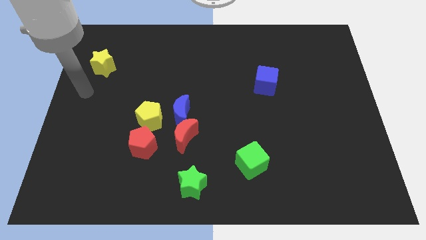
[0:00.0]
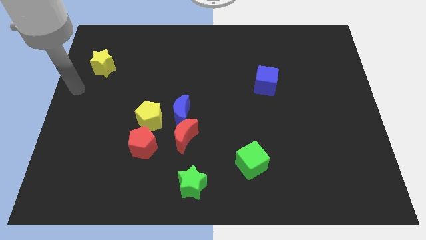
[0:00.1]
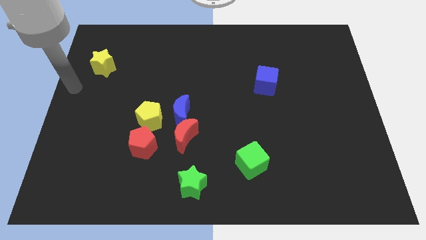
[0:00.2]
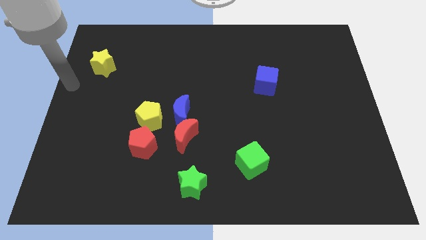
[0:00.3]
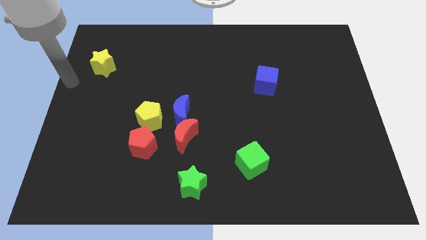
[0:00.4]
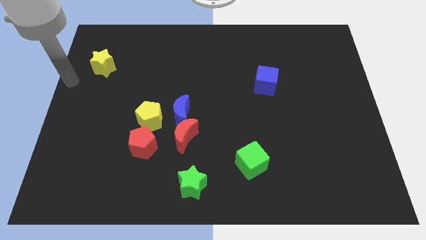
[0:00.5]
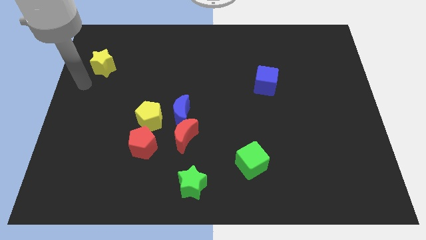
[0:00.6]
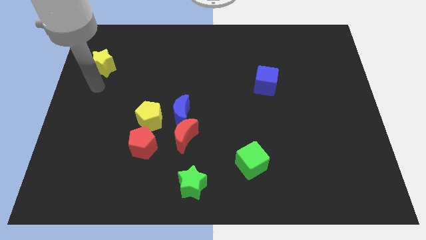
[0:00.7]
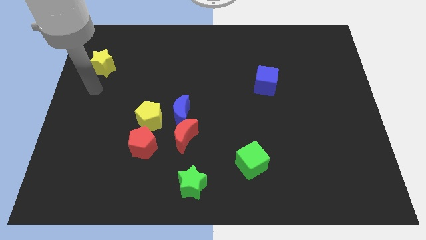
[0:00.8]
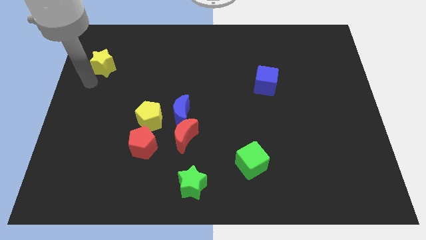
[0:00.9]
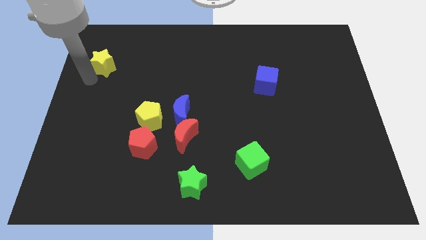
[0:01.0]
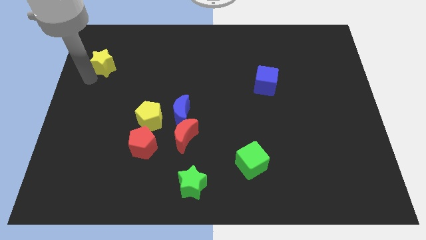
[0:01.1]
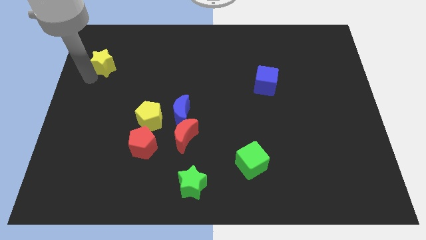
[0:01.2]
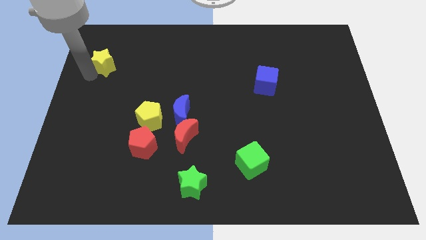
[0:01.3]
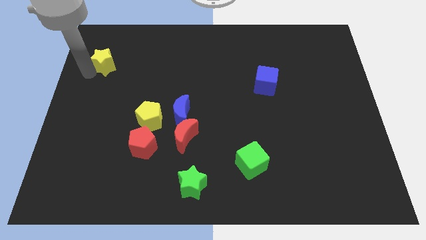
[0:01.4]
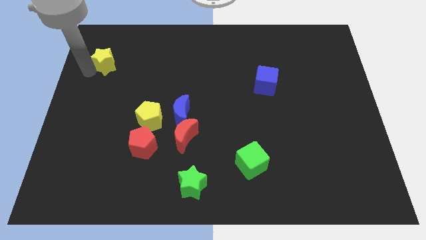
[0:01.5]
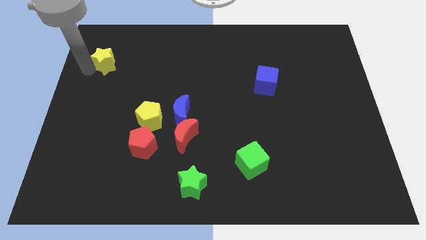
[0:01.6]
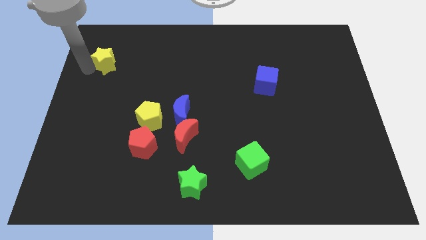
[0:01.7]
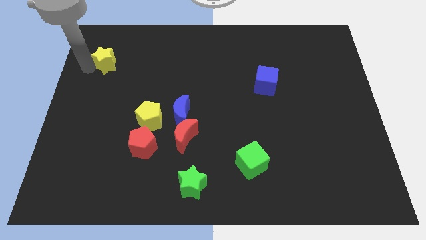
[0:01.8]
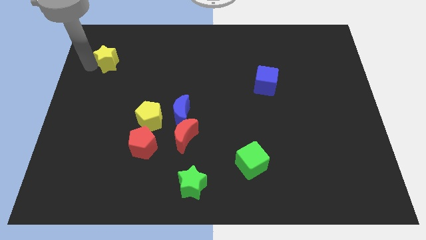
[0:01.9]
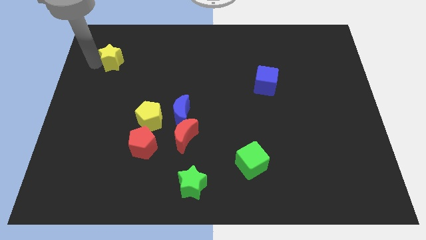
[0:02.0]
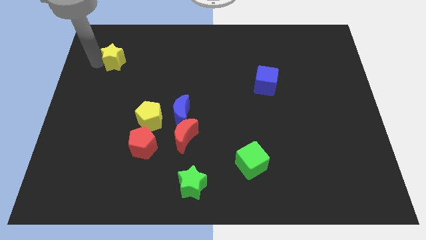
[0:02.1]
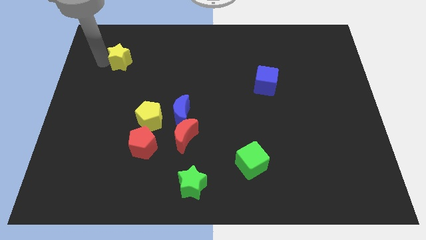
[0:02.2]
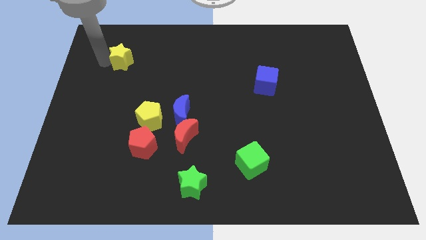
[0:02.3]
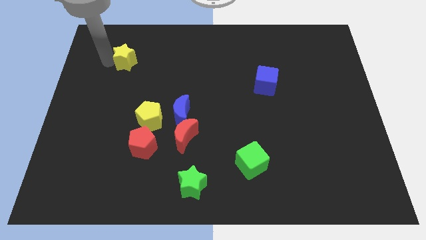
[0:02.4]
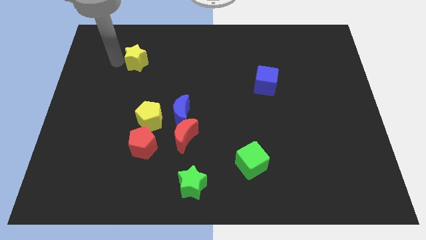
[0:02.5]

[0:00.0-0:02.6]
slightly push the yellow star towards the top right

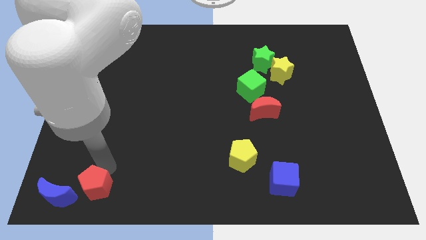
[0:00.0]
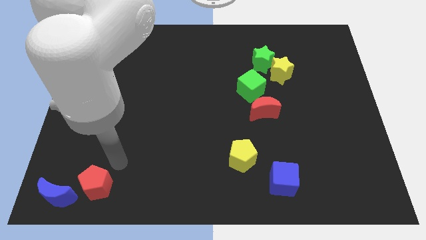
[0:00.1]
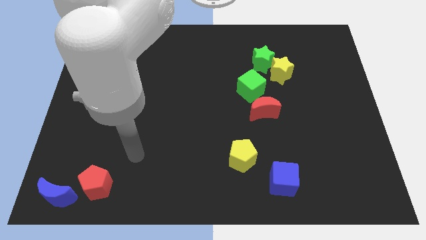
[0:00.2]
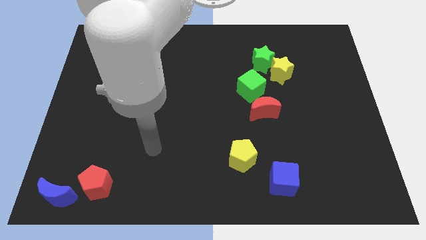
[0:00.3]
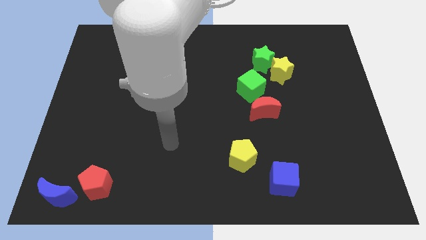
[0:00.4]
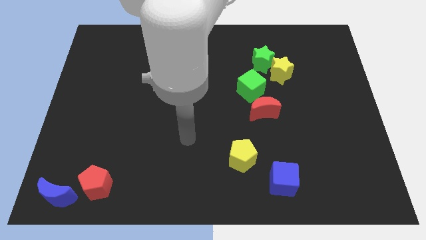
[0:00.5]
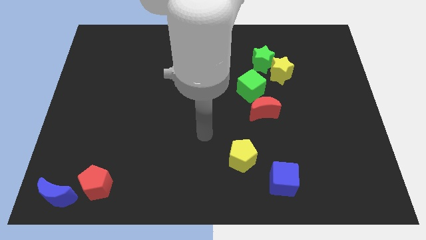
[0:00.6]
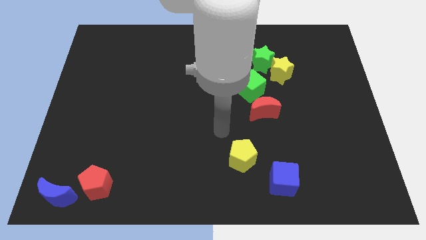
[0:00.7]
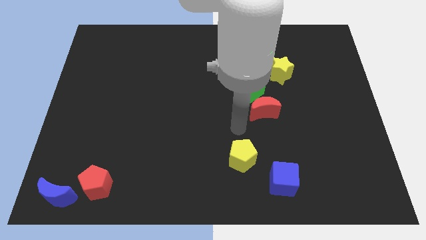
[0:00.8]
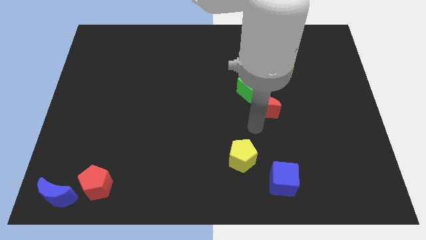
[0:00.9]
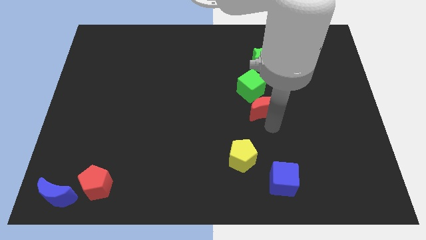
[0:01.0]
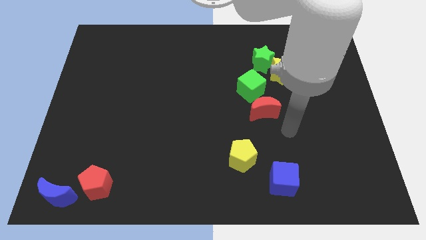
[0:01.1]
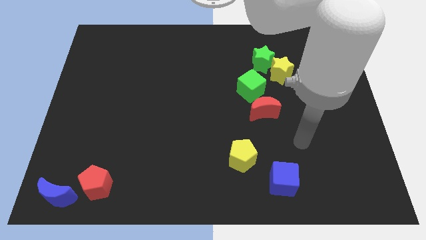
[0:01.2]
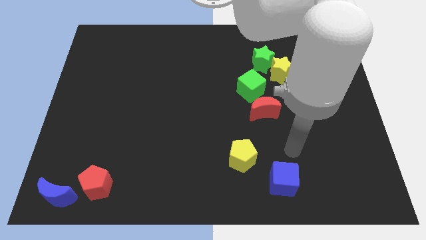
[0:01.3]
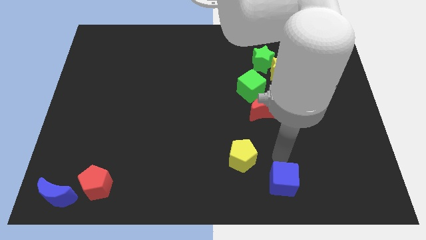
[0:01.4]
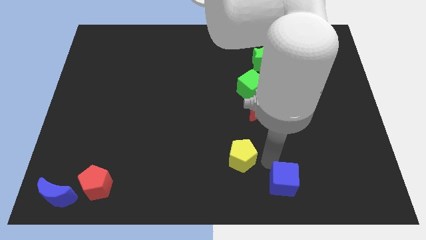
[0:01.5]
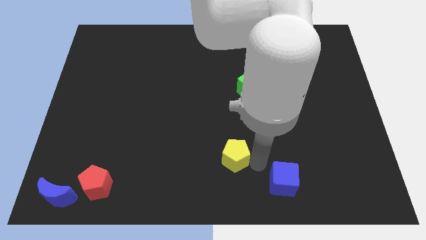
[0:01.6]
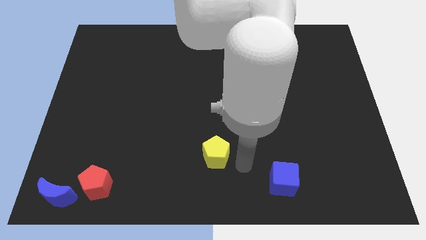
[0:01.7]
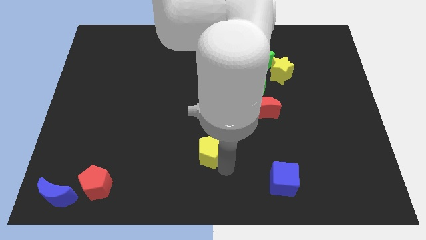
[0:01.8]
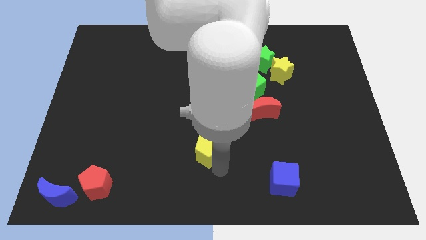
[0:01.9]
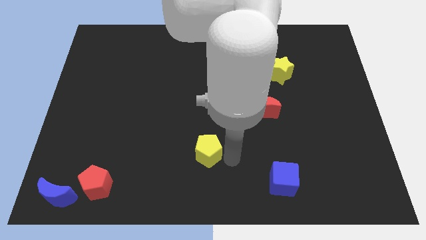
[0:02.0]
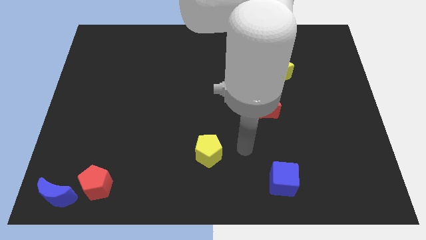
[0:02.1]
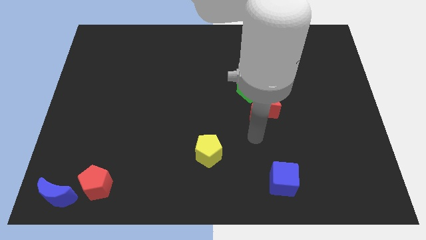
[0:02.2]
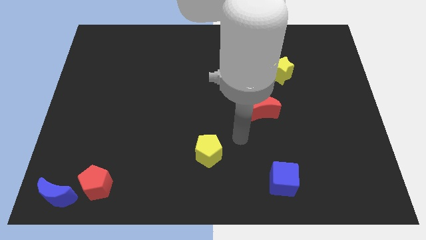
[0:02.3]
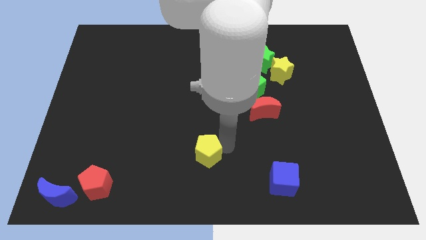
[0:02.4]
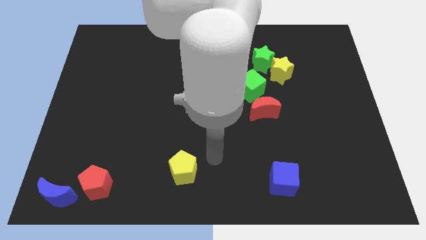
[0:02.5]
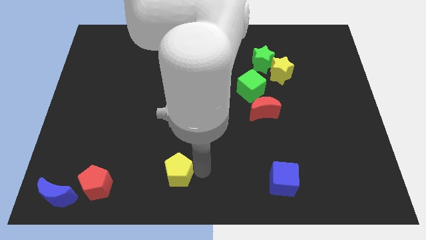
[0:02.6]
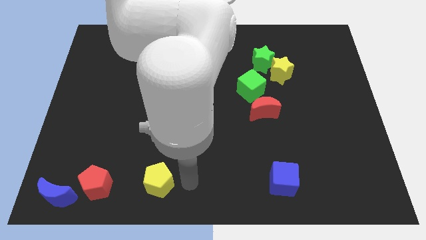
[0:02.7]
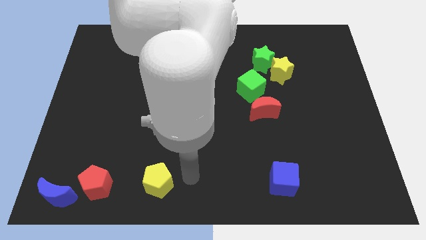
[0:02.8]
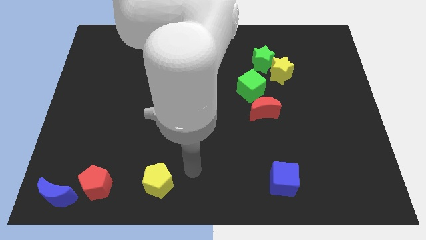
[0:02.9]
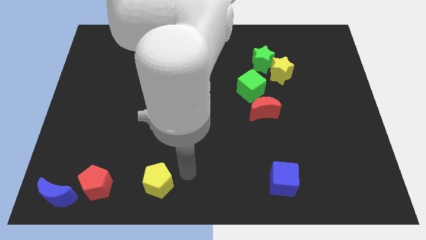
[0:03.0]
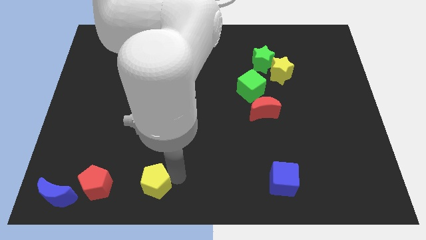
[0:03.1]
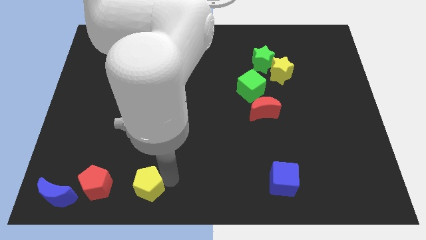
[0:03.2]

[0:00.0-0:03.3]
move yellow pentagon towards red pentagon

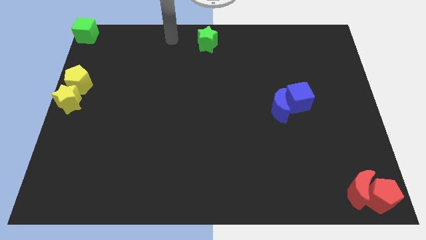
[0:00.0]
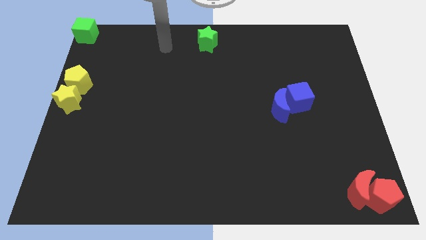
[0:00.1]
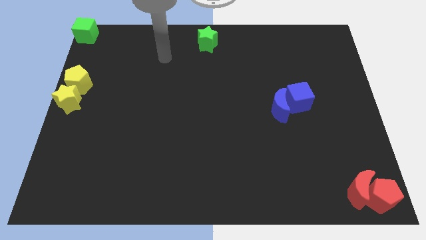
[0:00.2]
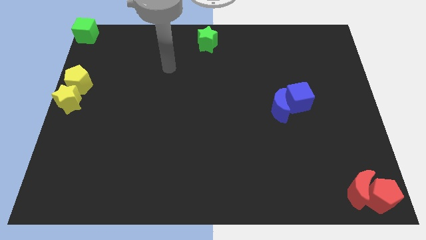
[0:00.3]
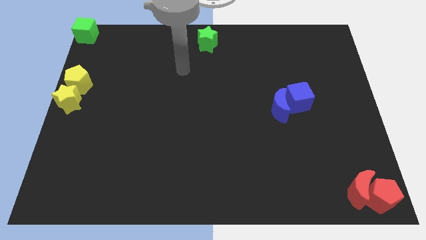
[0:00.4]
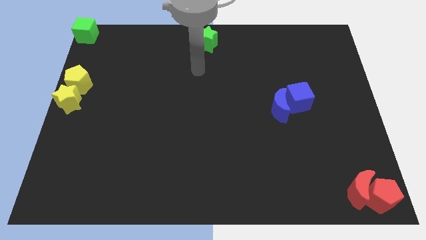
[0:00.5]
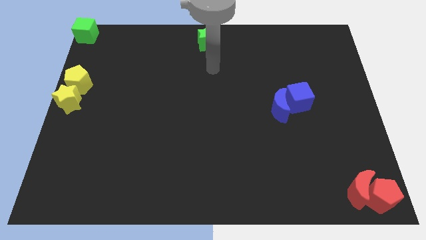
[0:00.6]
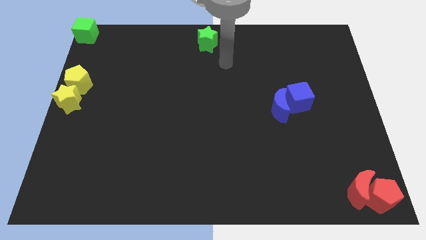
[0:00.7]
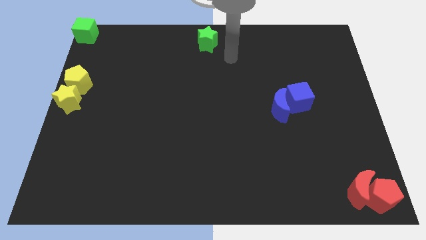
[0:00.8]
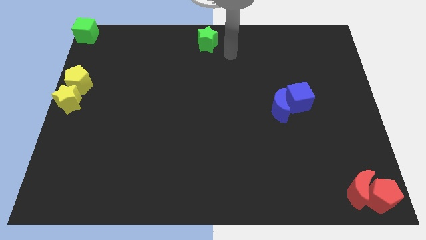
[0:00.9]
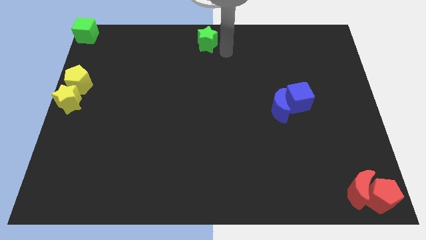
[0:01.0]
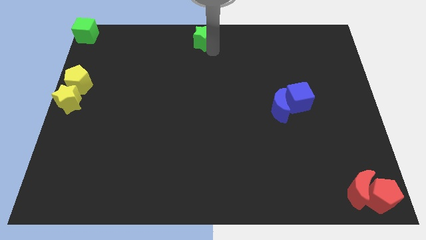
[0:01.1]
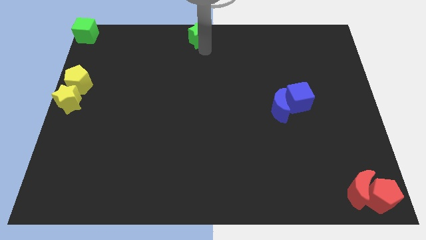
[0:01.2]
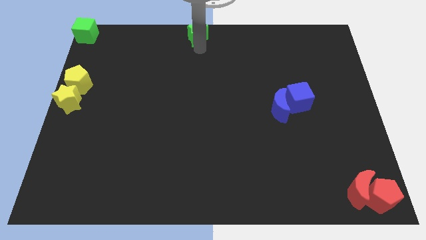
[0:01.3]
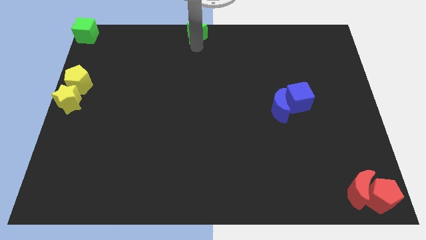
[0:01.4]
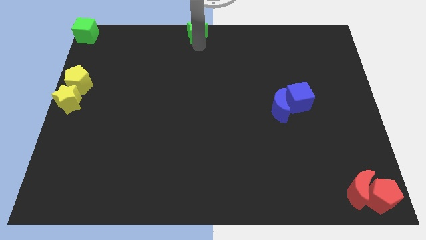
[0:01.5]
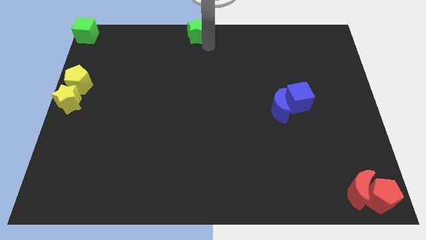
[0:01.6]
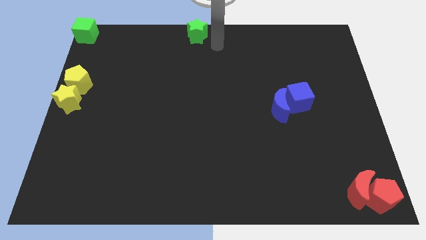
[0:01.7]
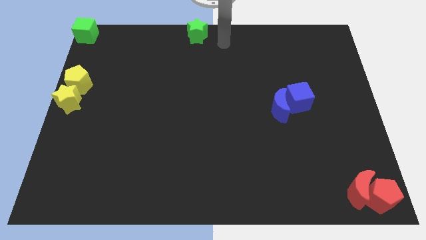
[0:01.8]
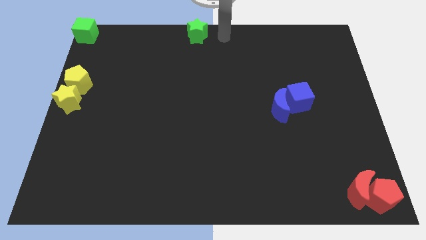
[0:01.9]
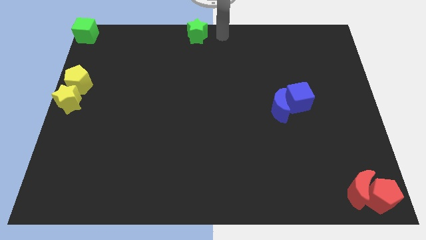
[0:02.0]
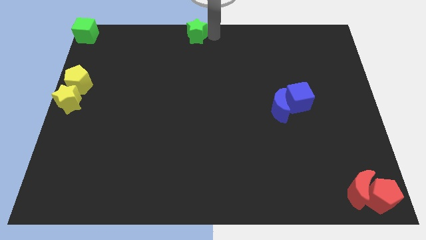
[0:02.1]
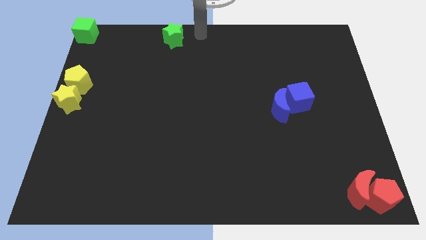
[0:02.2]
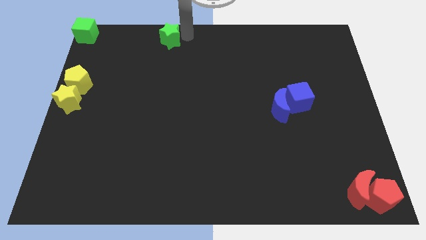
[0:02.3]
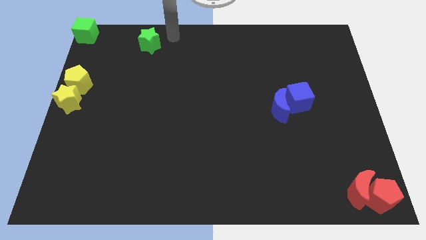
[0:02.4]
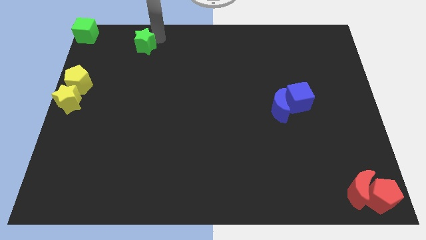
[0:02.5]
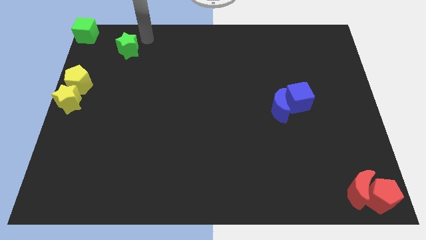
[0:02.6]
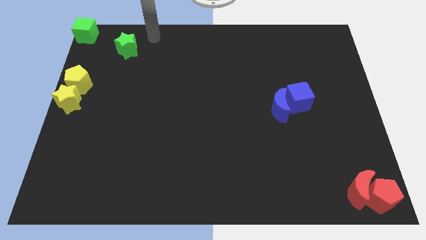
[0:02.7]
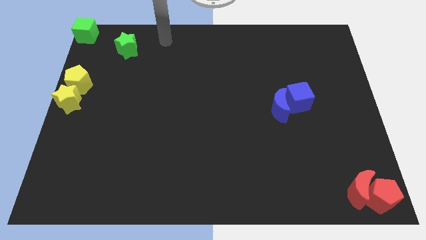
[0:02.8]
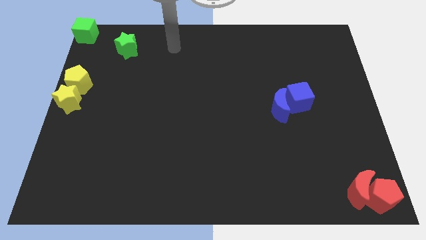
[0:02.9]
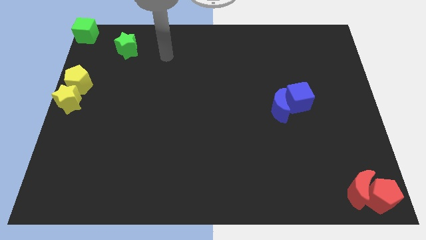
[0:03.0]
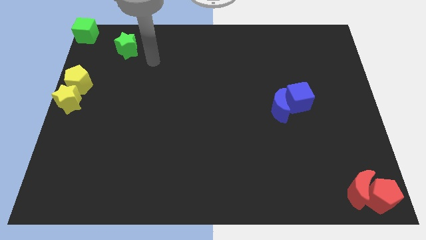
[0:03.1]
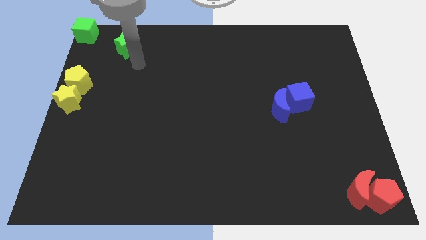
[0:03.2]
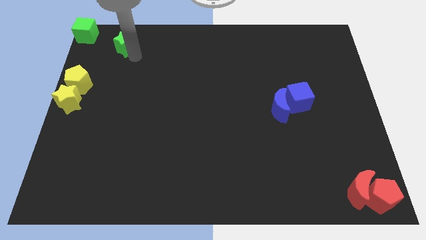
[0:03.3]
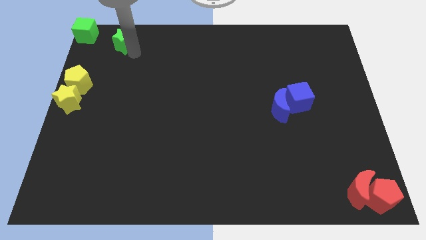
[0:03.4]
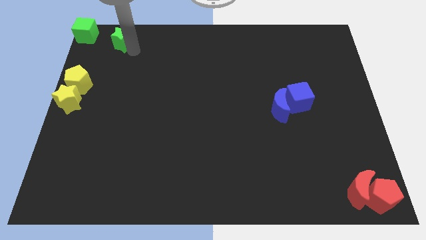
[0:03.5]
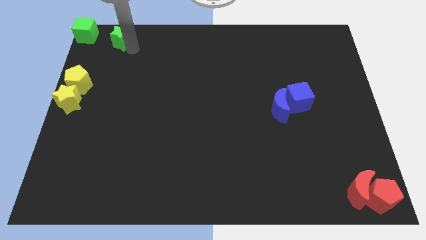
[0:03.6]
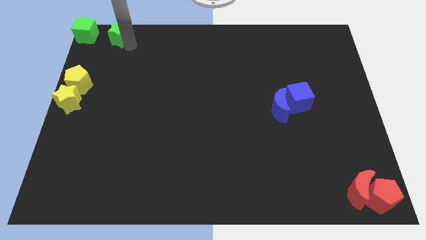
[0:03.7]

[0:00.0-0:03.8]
put the green star horizontally to the right side of the green cube
